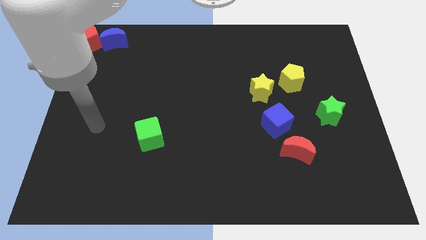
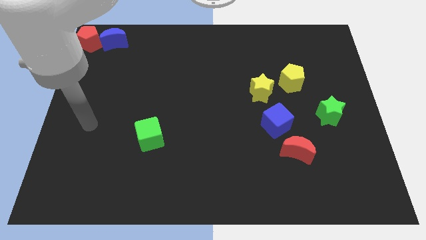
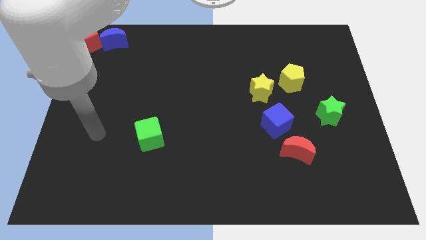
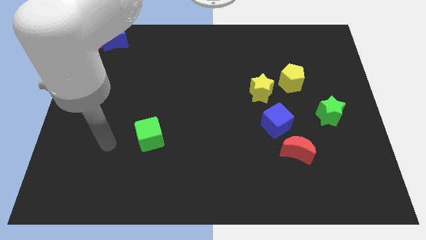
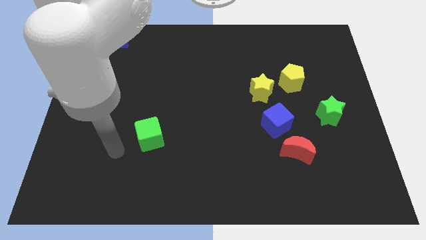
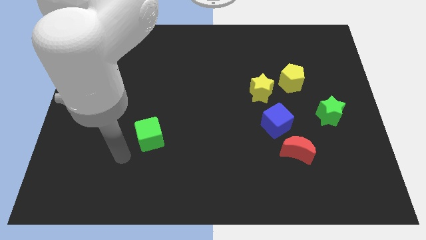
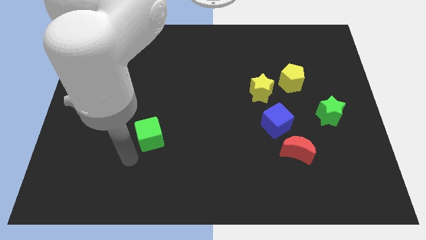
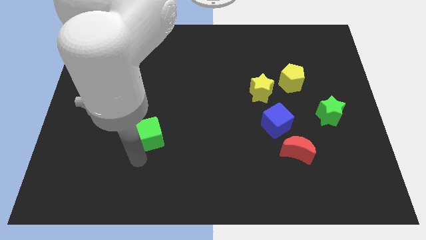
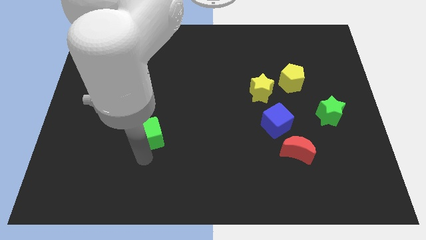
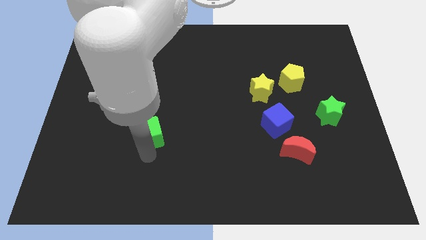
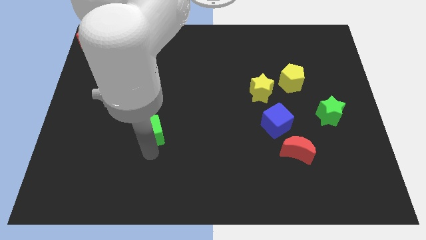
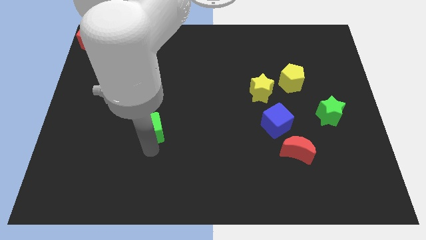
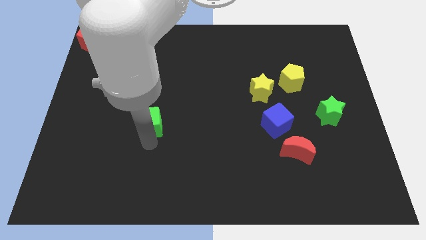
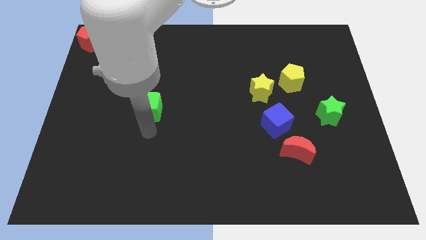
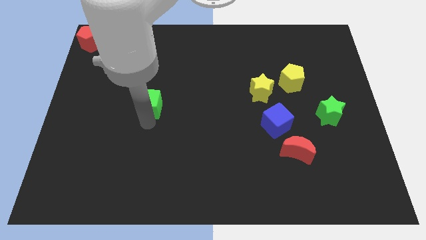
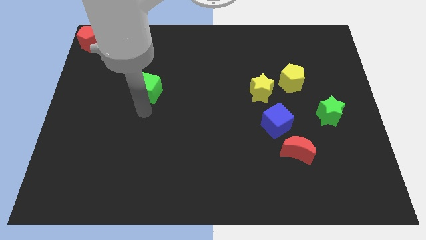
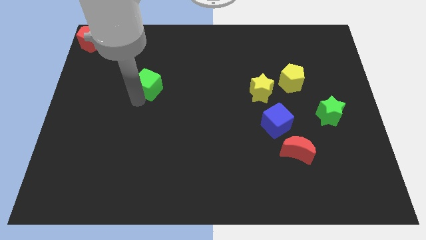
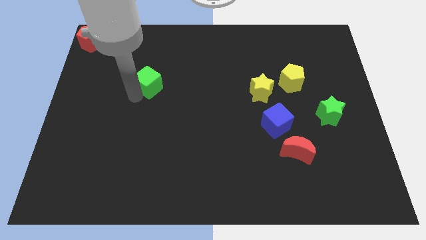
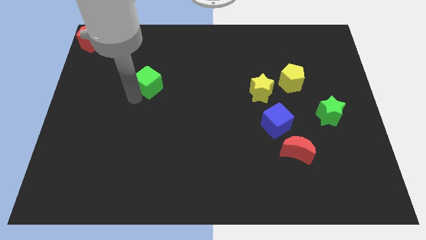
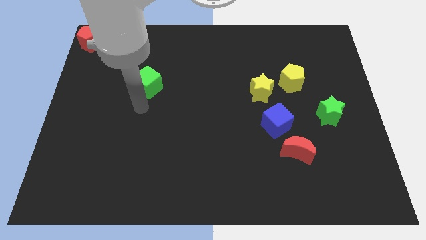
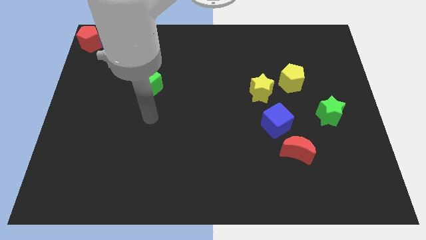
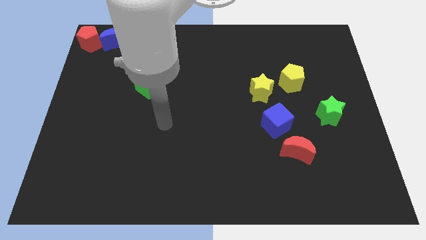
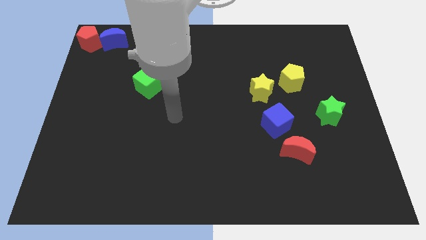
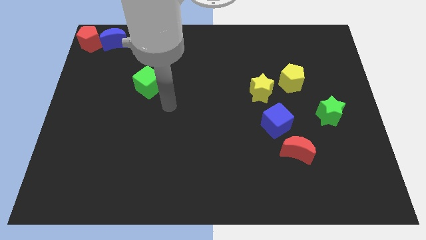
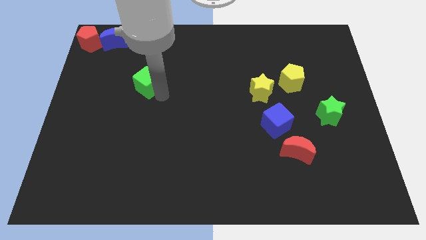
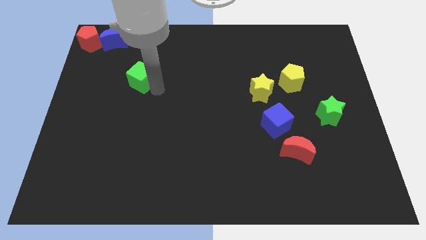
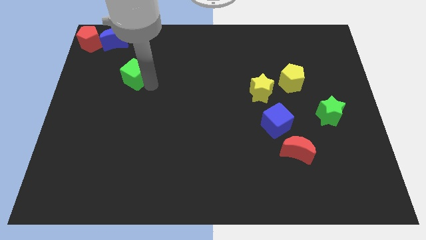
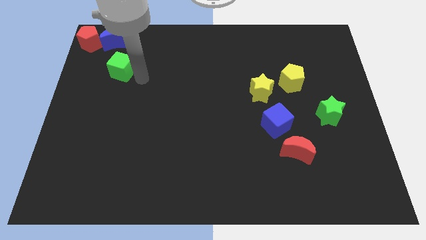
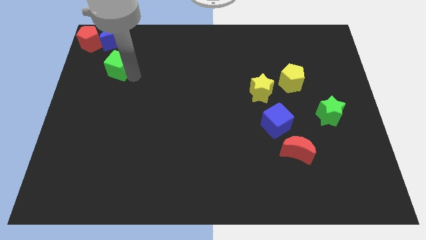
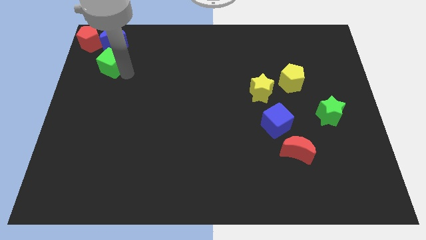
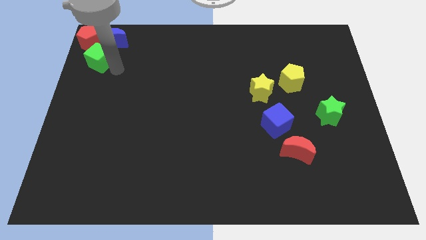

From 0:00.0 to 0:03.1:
push the green cube to the bottom of the red pentagon

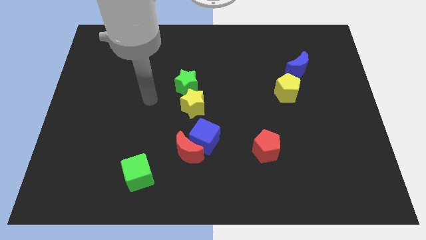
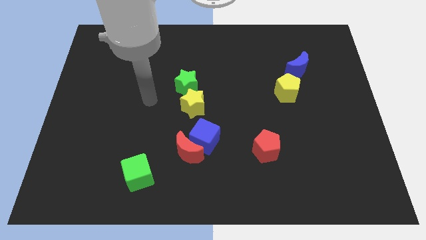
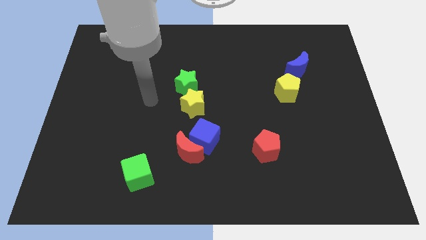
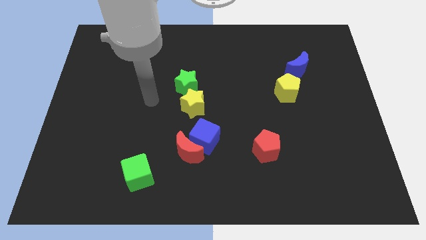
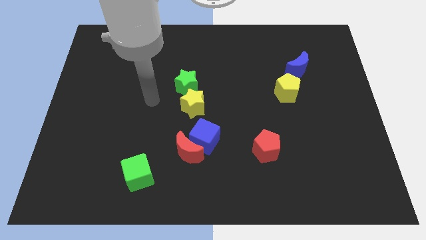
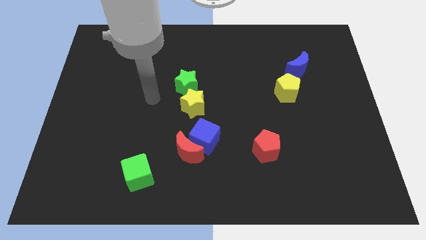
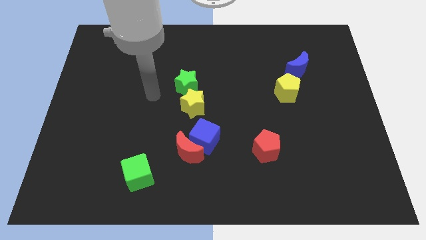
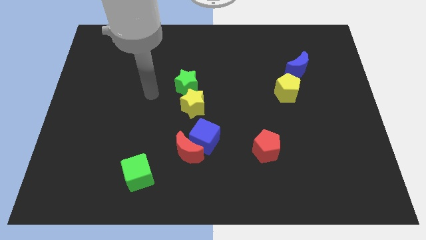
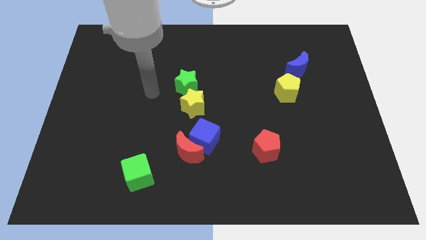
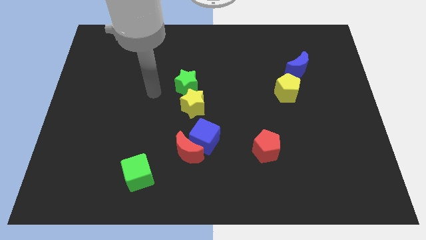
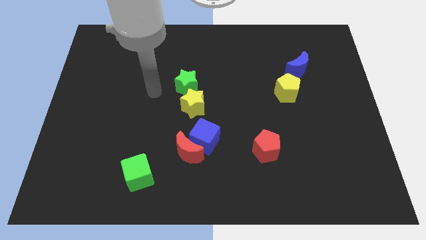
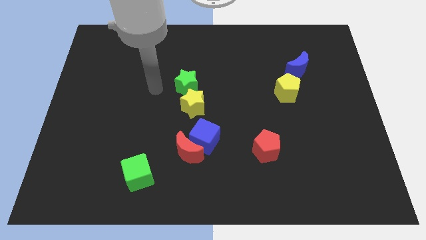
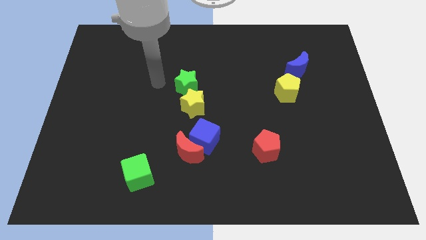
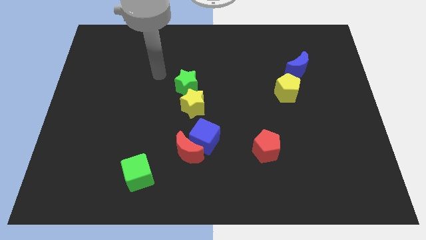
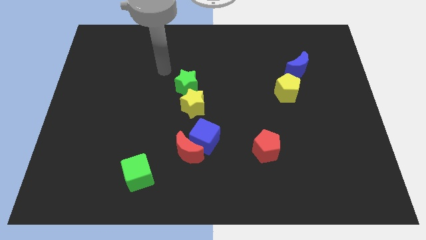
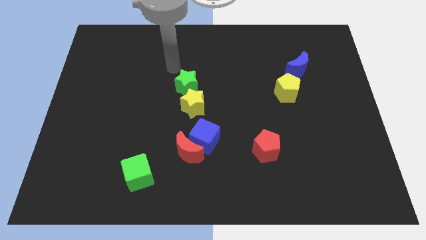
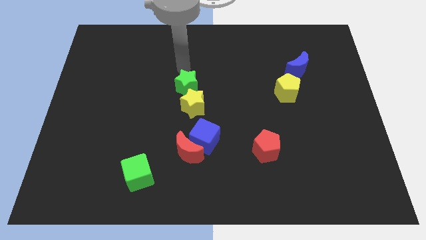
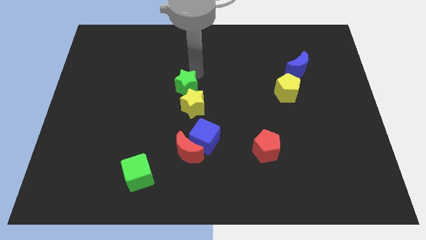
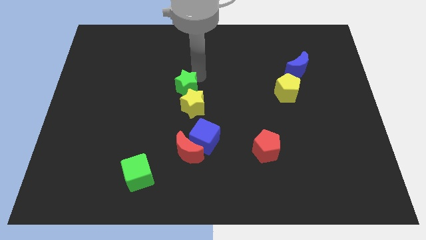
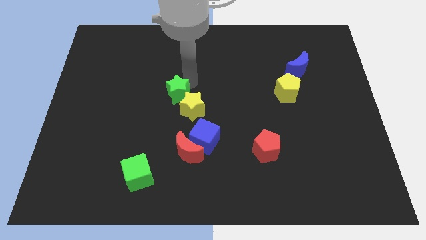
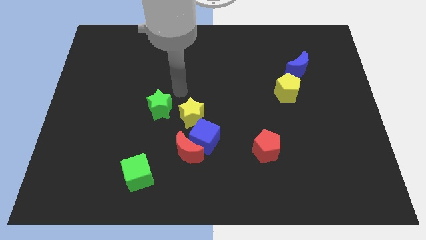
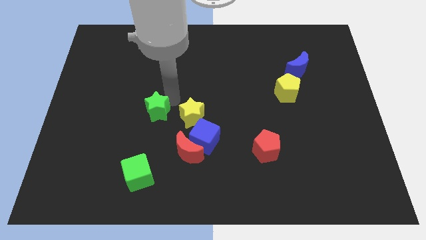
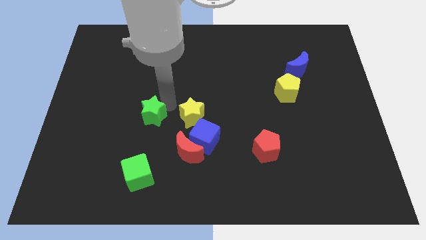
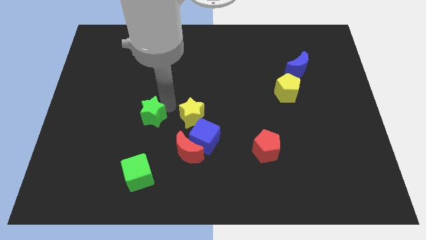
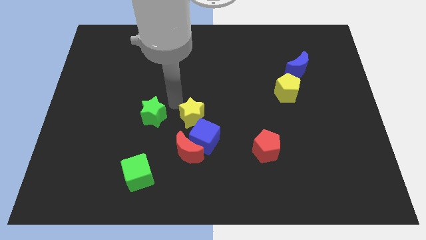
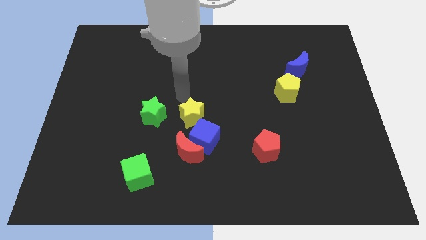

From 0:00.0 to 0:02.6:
move the green star left to the yellow star

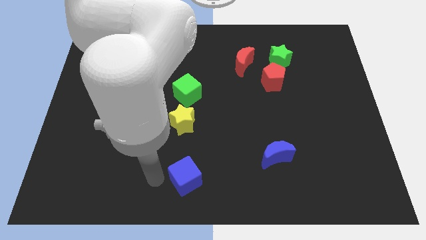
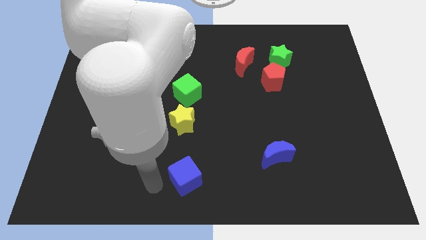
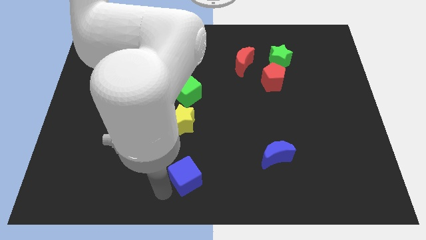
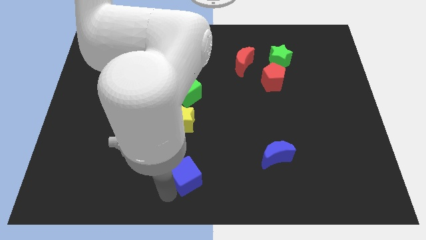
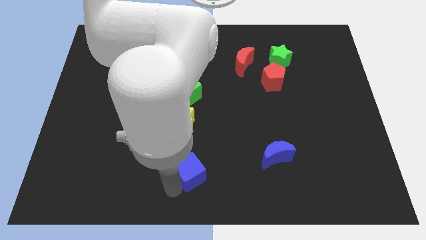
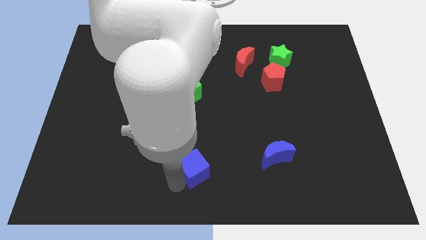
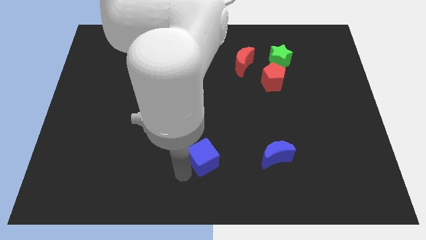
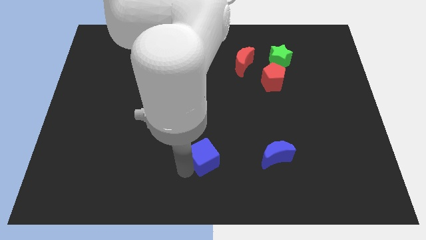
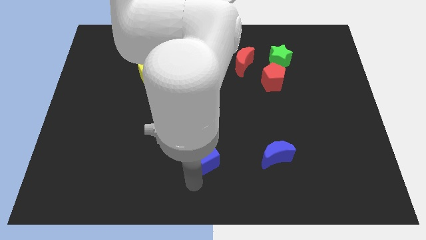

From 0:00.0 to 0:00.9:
push the blue cube upward

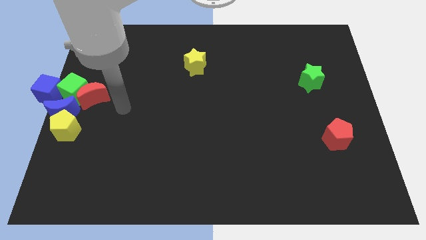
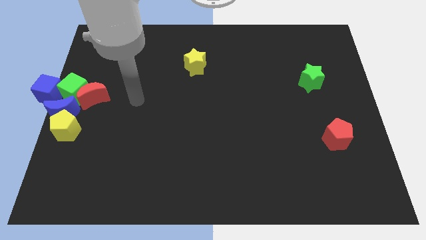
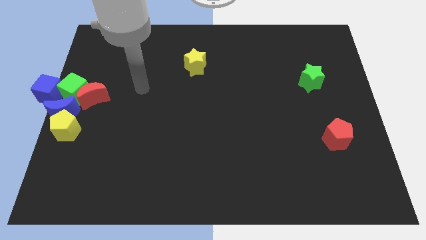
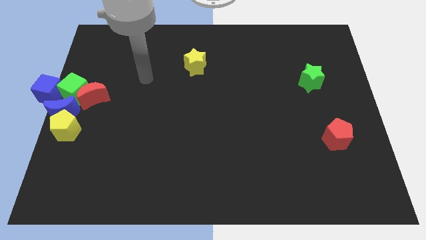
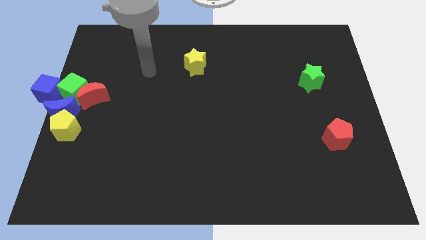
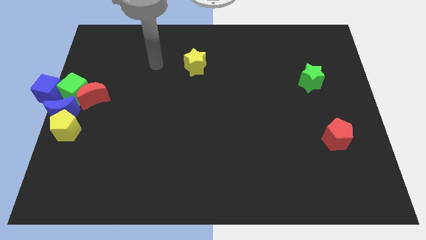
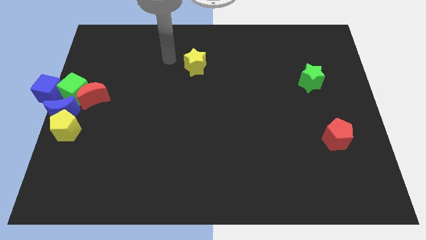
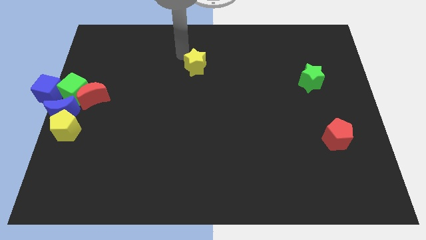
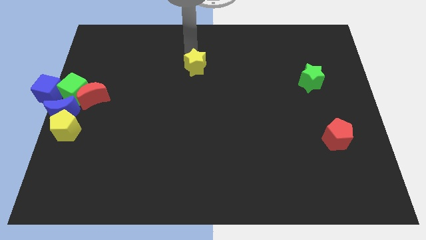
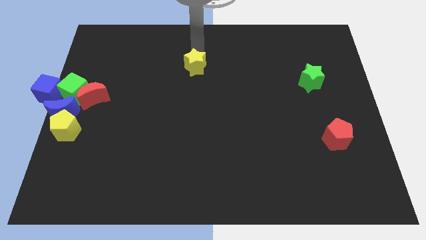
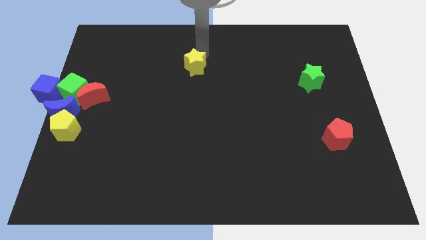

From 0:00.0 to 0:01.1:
move your arm towards the yellow star

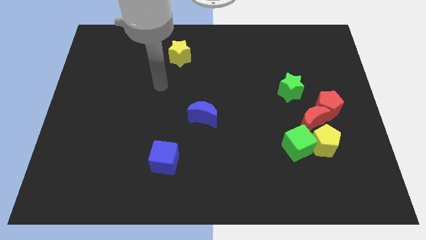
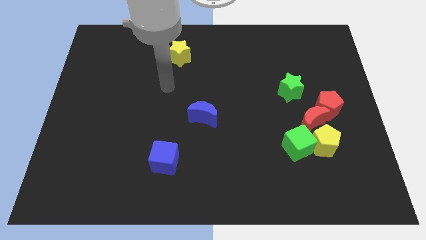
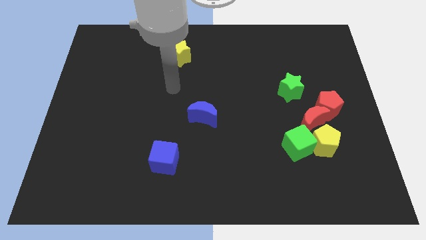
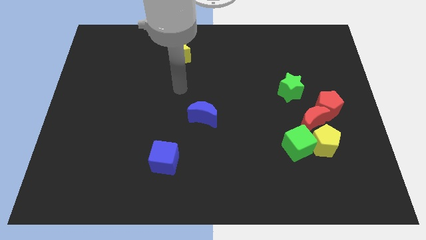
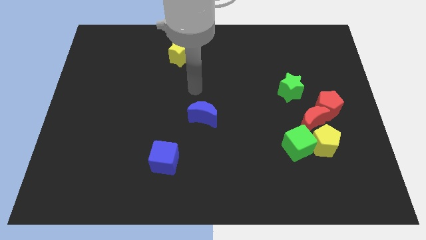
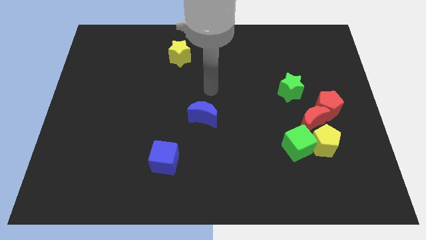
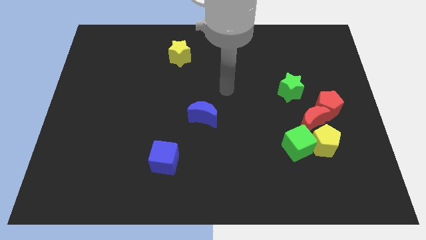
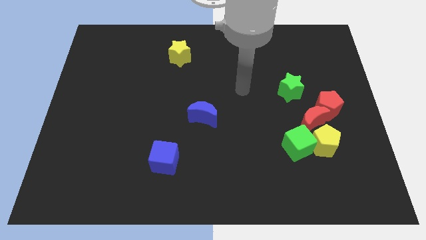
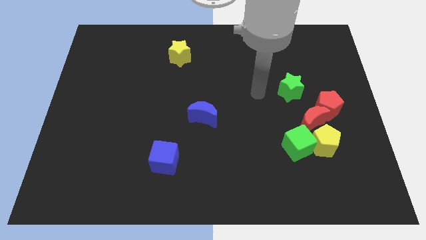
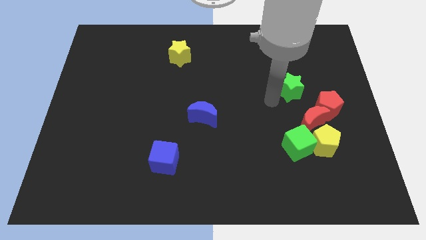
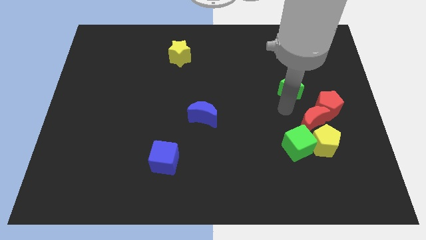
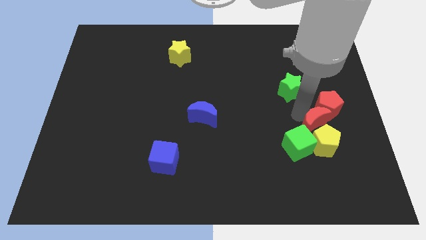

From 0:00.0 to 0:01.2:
move your arm towards the red crescent

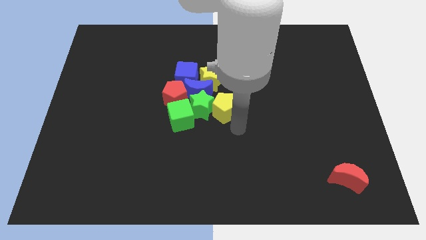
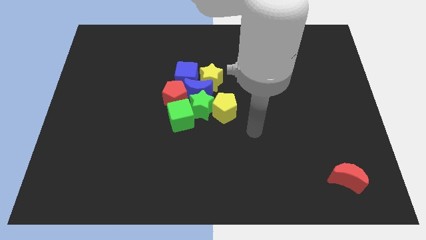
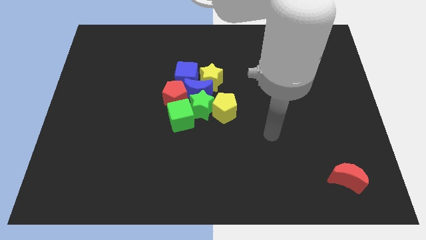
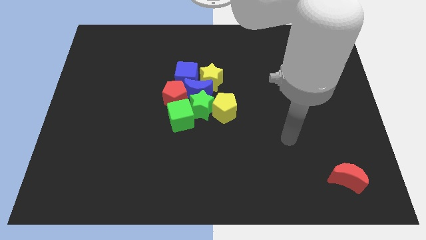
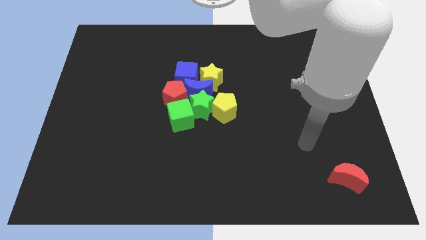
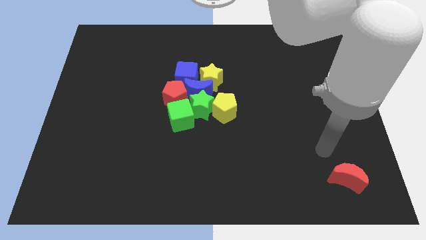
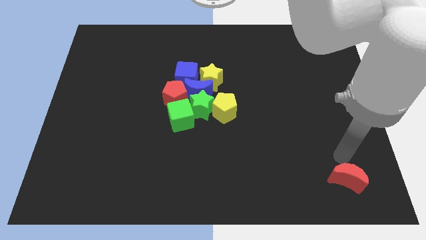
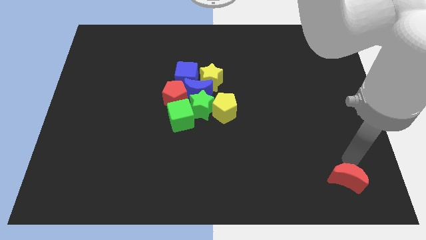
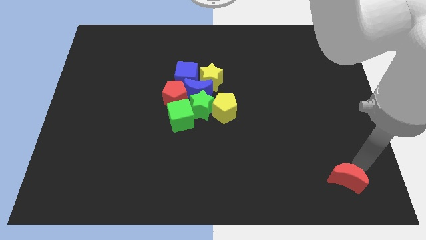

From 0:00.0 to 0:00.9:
move the arm away from the yellow pentagon
